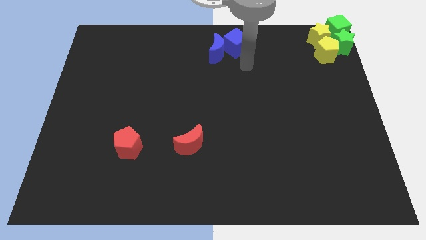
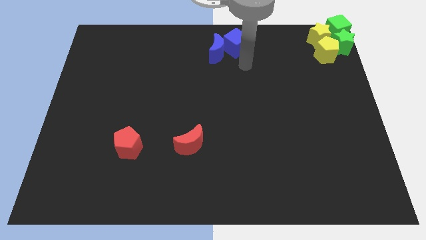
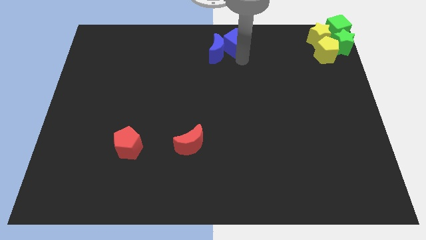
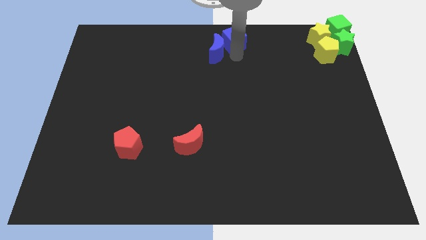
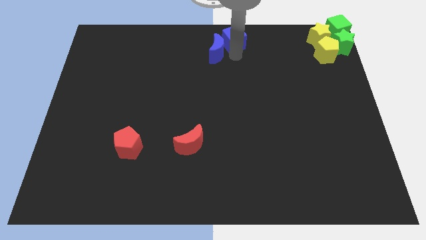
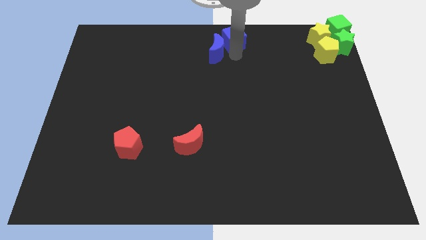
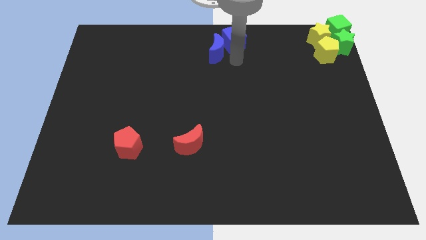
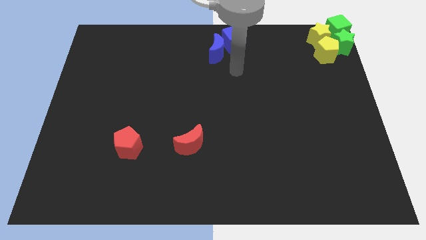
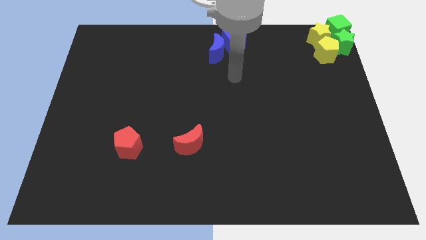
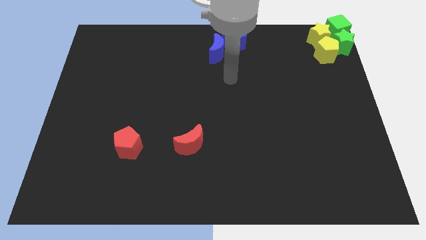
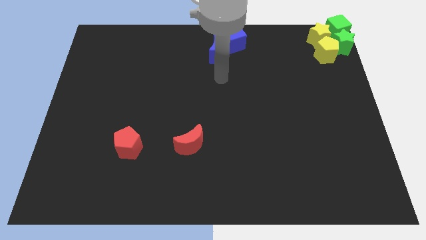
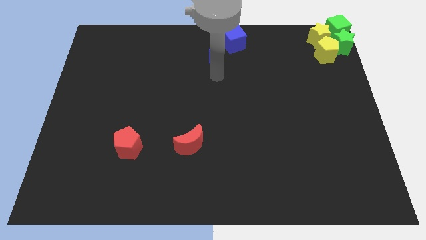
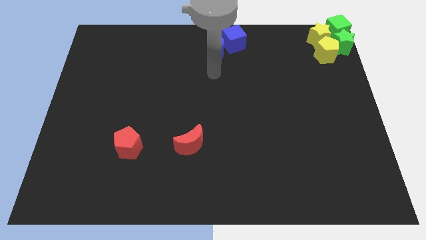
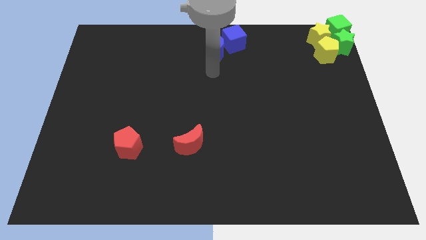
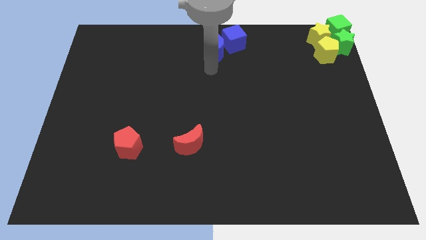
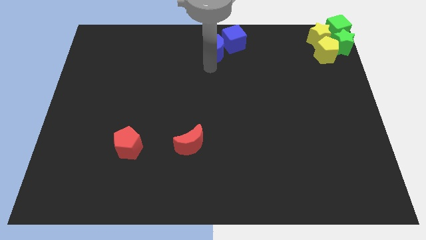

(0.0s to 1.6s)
push blue cube slightly to the top centre

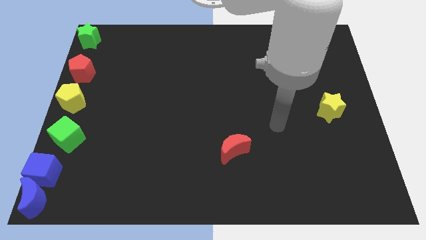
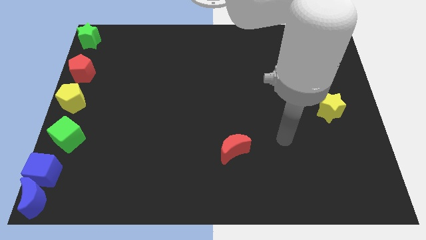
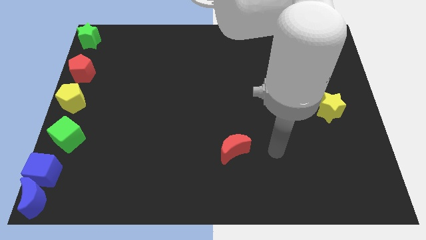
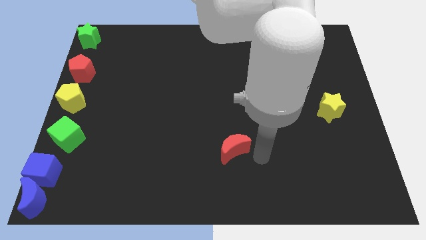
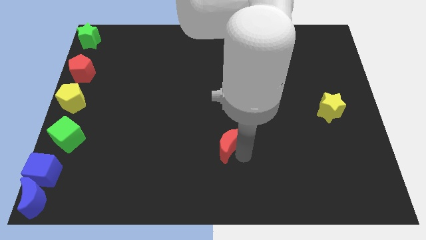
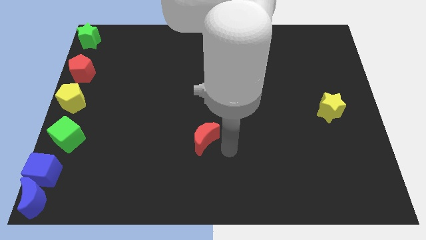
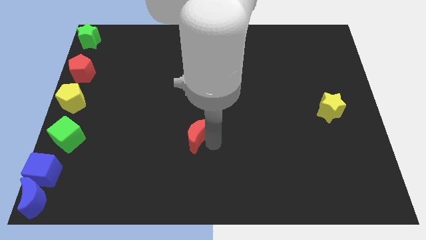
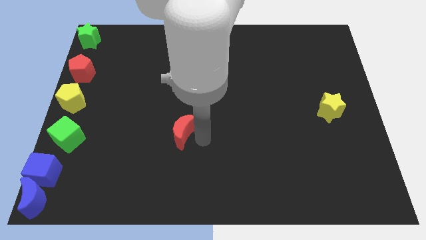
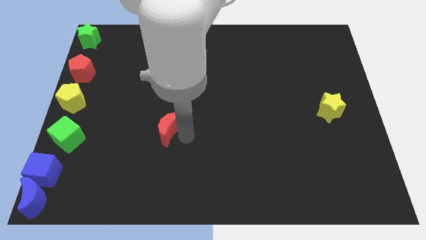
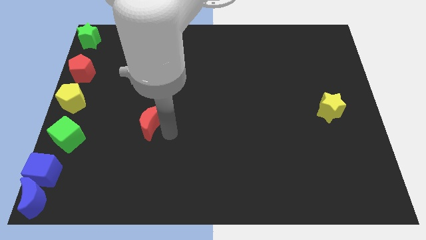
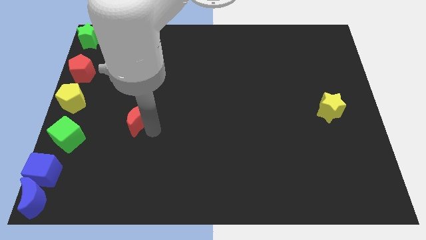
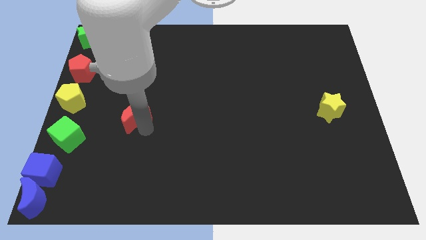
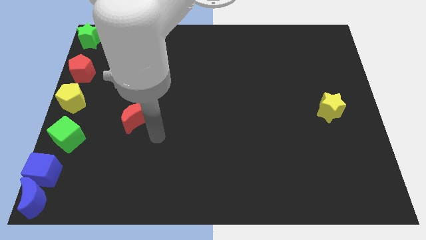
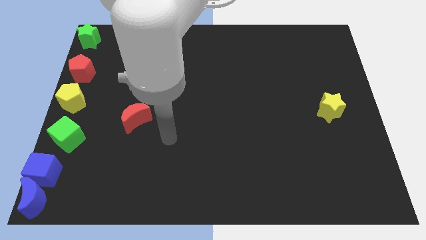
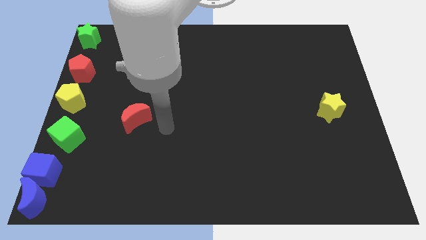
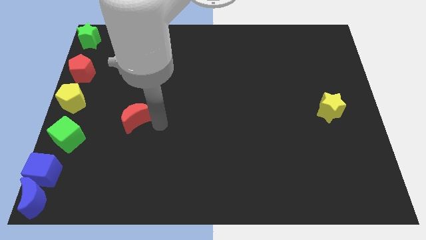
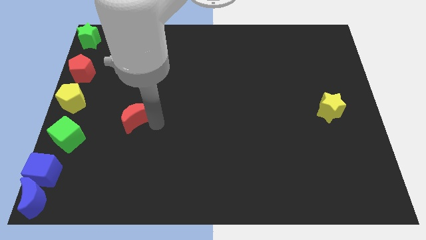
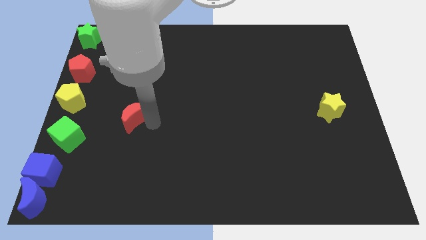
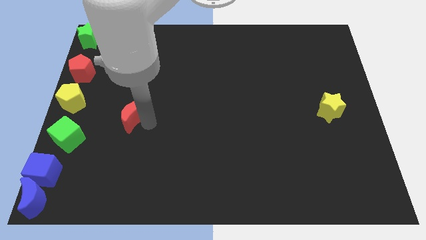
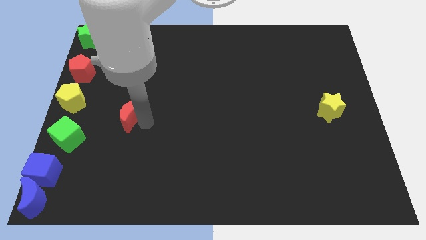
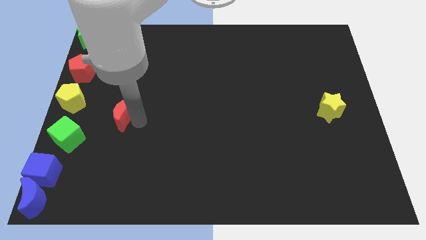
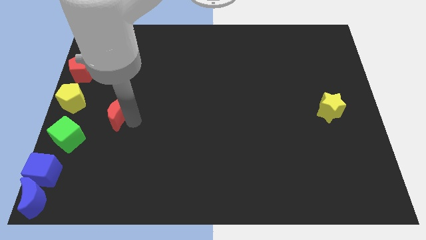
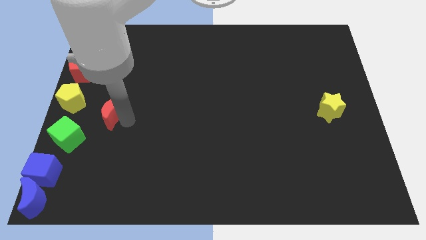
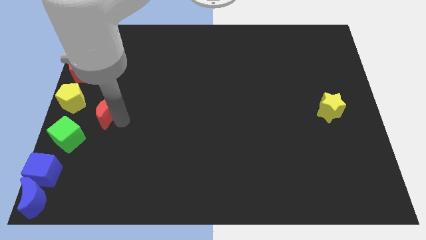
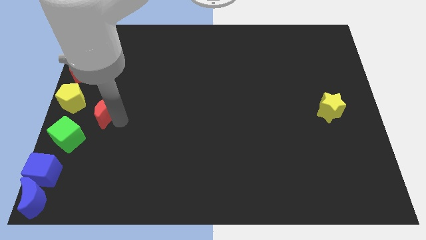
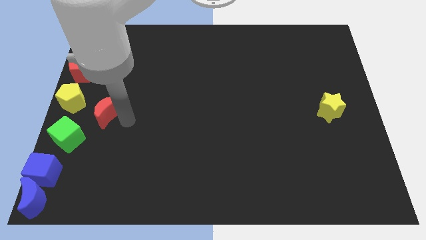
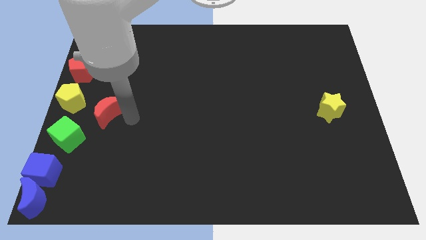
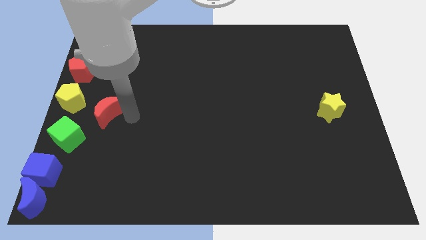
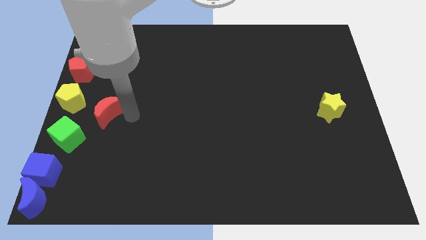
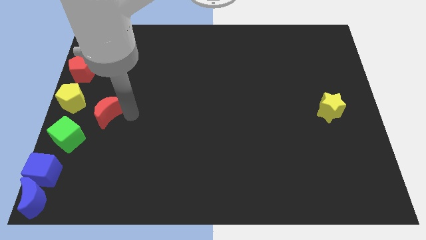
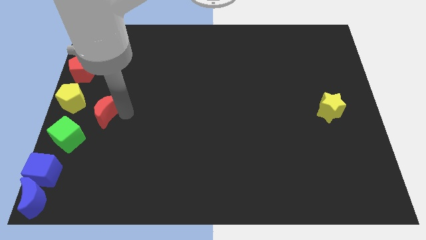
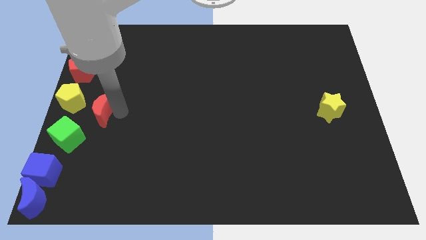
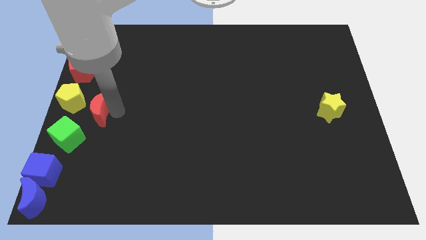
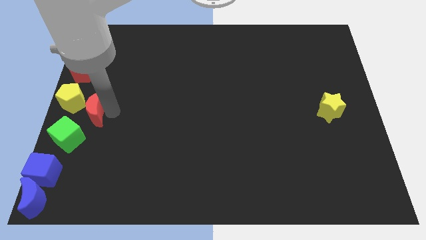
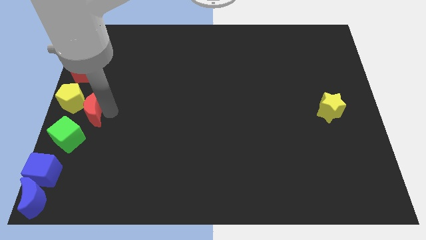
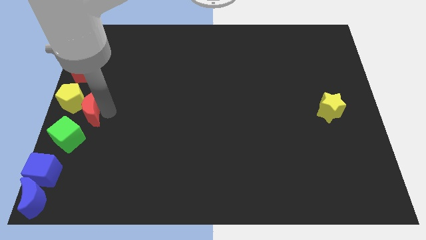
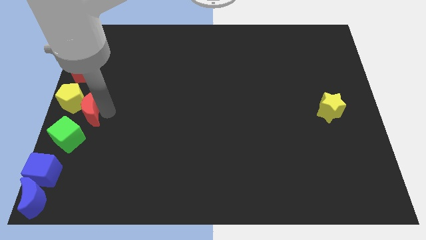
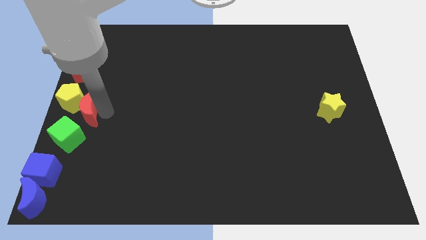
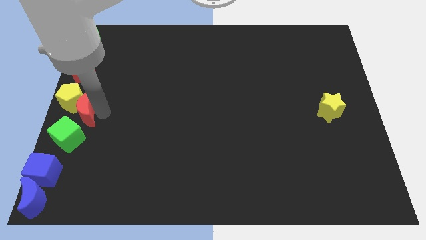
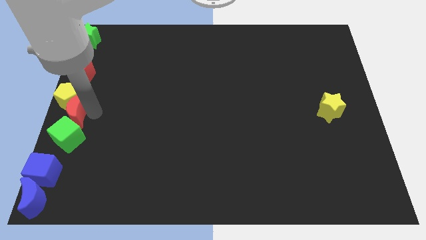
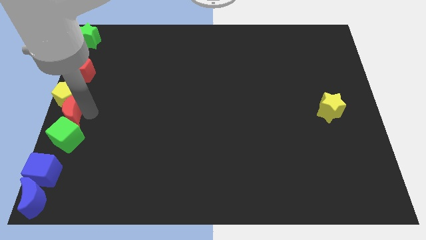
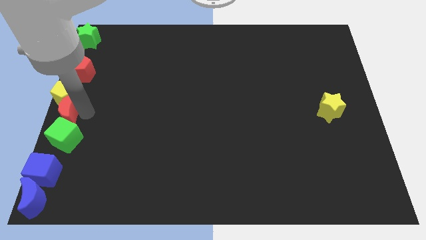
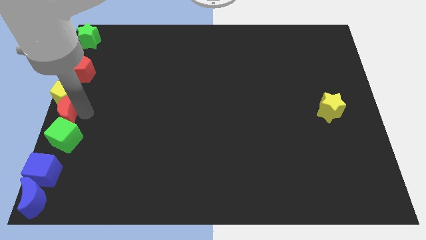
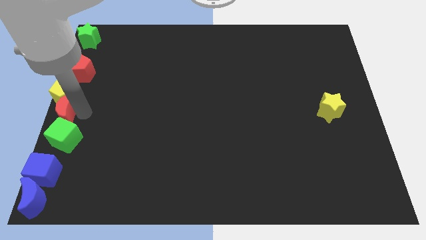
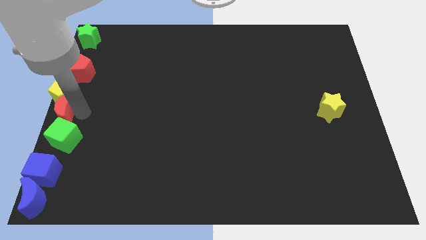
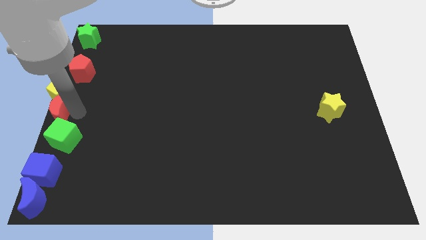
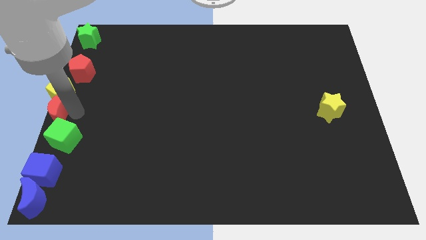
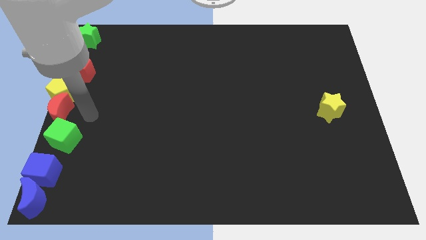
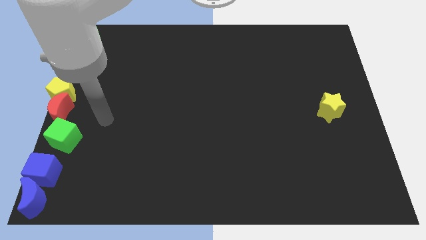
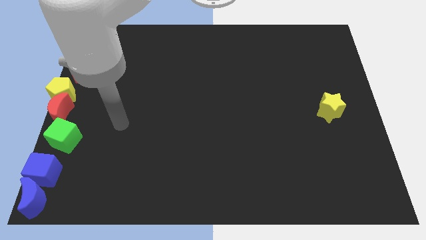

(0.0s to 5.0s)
place red crescent in between the yellow pentagon and green cube

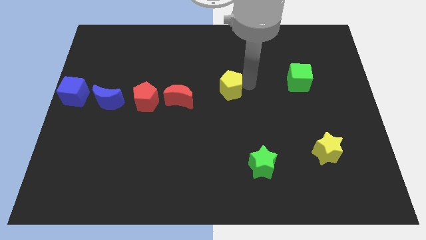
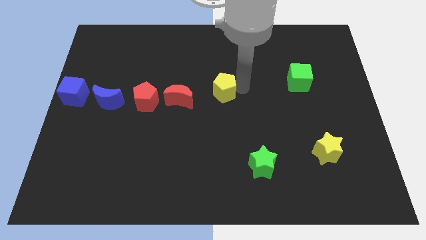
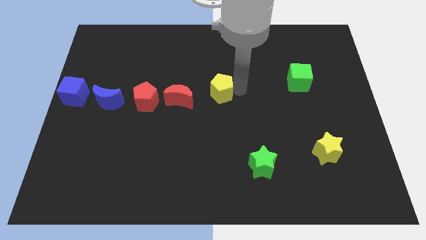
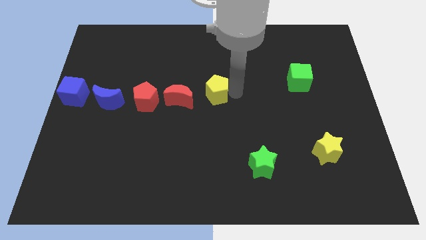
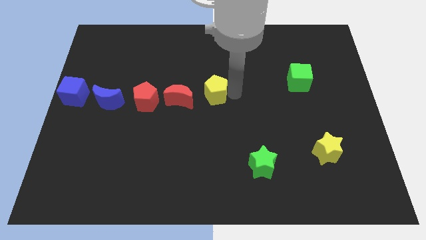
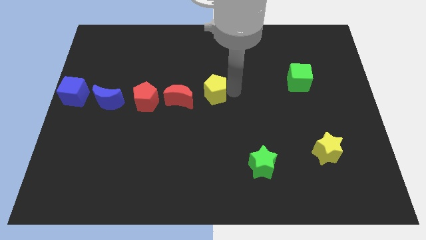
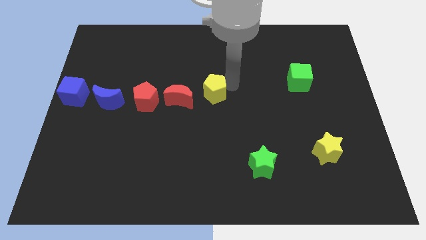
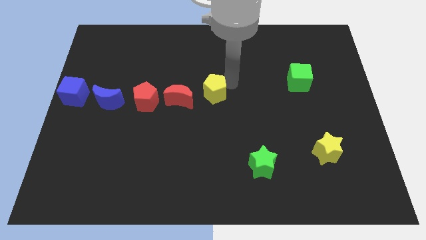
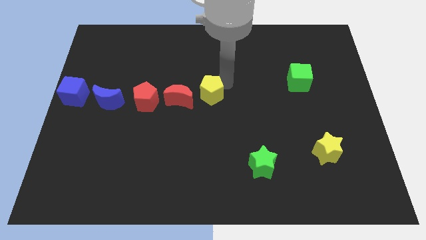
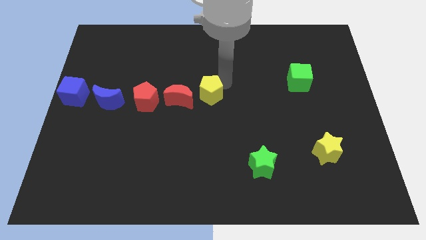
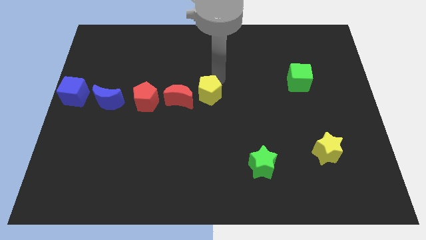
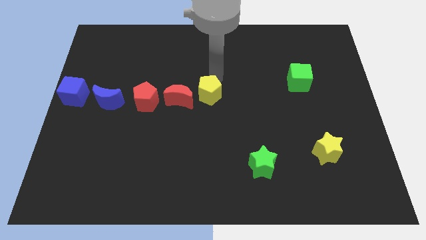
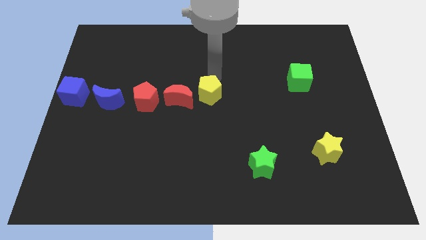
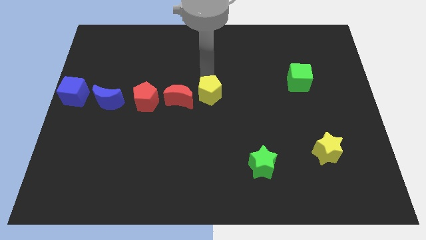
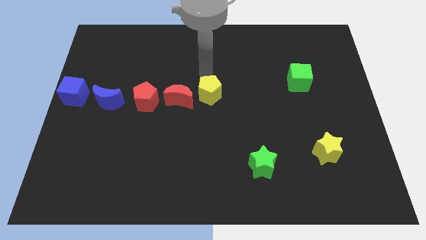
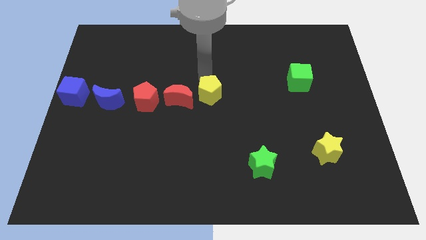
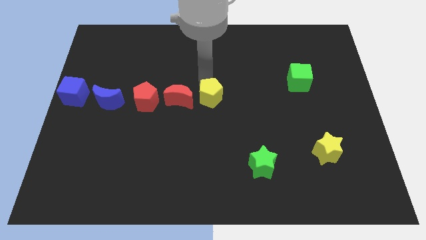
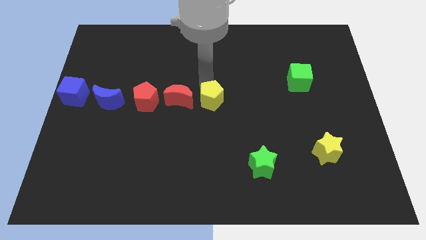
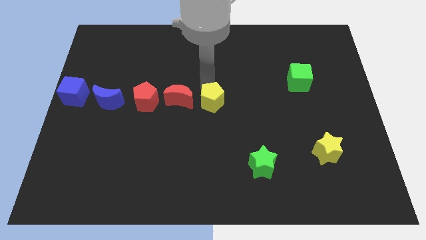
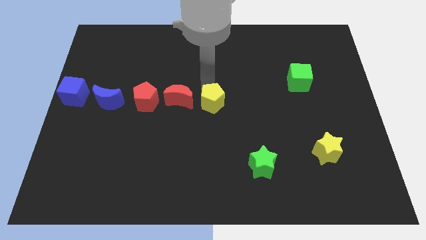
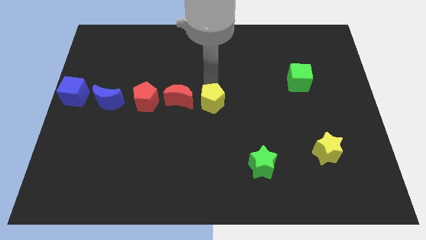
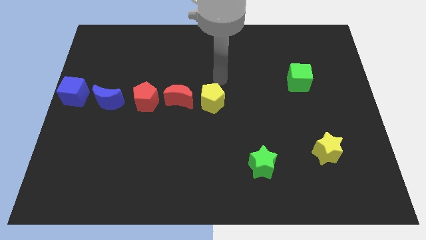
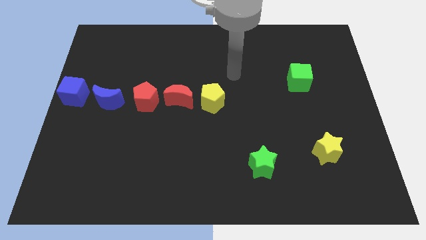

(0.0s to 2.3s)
push the yellow pentagon to the right side of the red moon

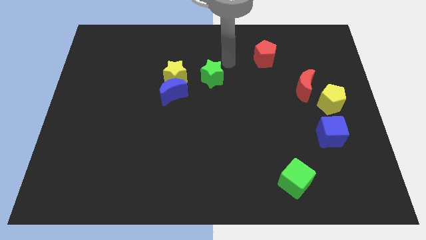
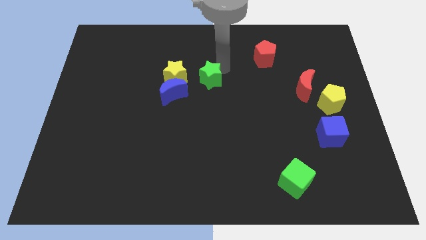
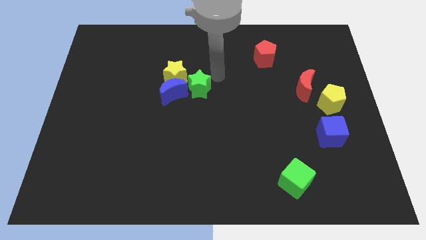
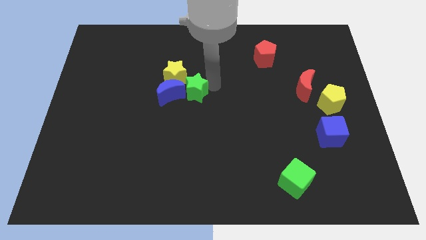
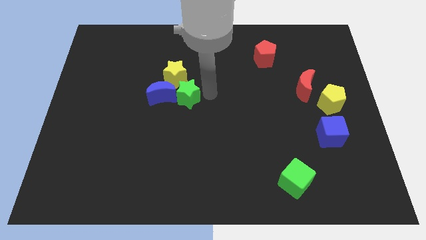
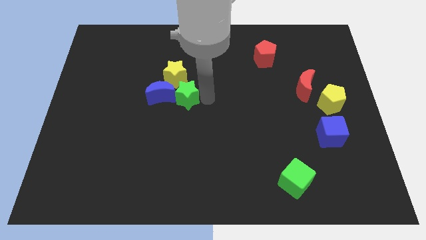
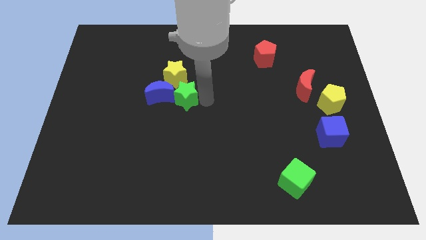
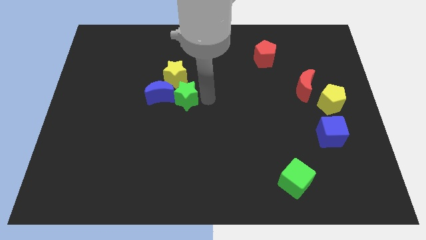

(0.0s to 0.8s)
push the green star into the blue moon
